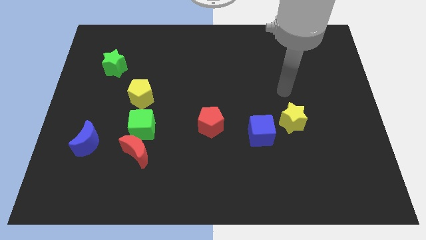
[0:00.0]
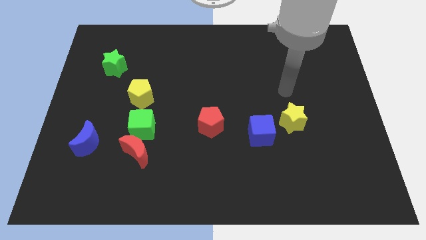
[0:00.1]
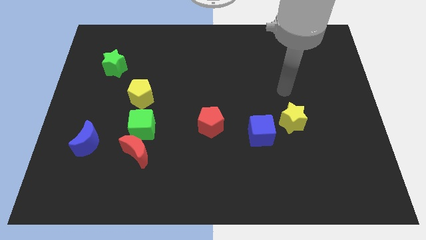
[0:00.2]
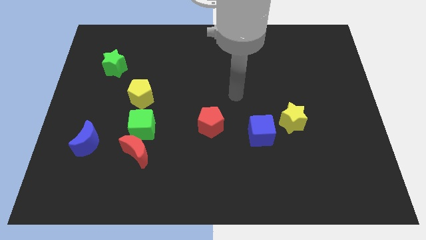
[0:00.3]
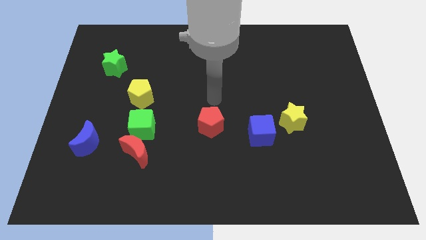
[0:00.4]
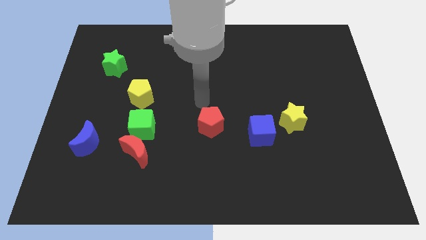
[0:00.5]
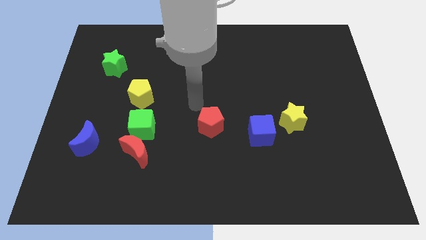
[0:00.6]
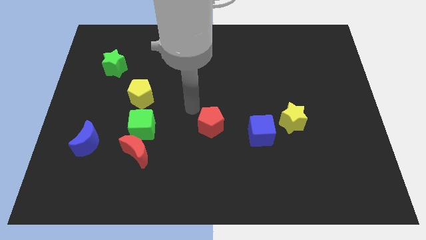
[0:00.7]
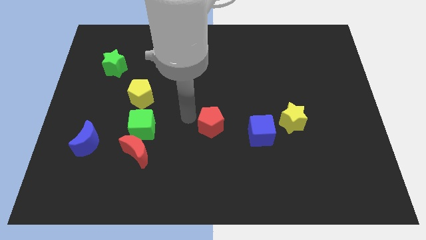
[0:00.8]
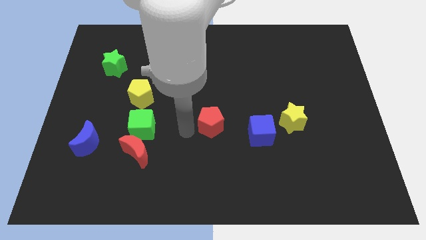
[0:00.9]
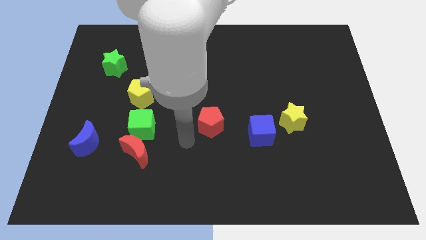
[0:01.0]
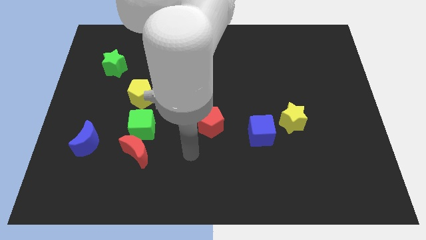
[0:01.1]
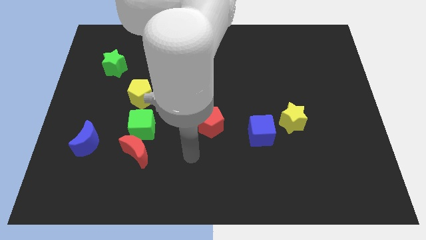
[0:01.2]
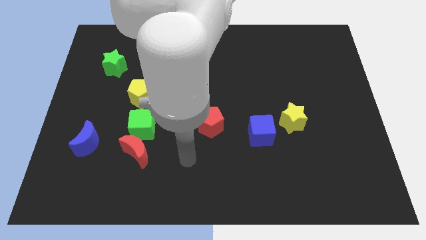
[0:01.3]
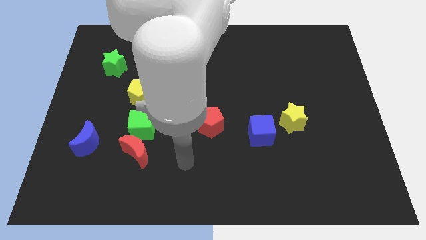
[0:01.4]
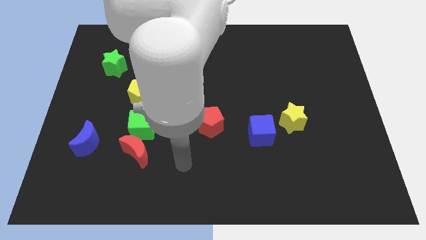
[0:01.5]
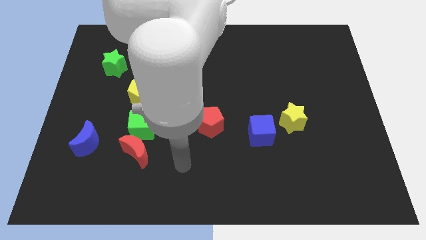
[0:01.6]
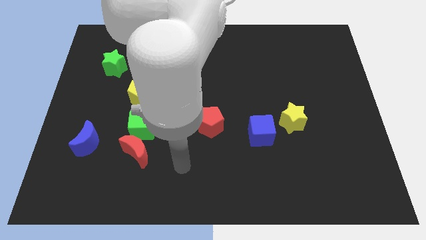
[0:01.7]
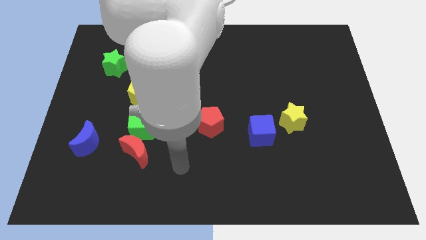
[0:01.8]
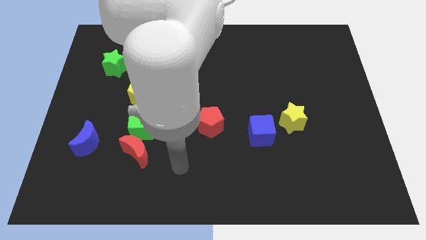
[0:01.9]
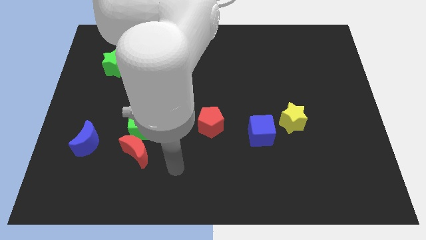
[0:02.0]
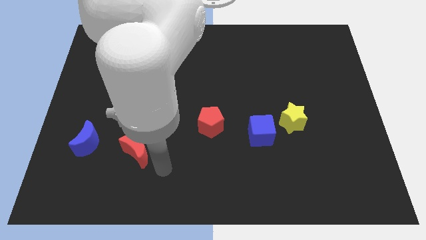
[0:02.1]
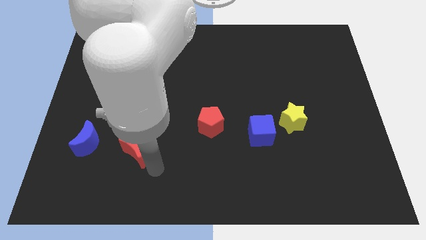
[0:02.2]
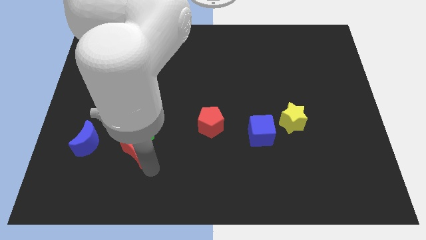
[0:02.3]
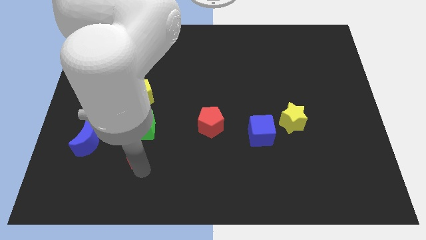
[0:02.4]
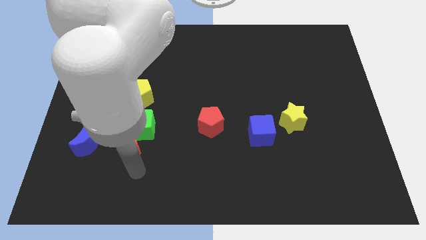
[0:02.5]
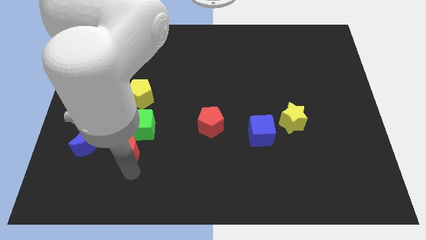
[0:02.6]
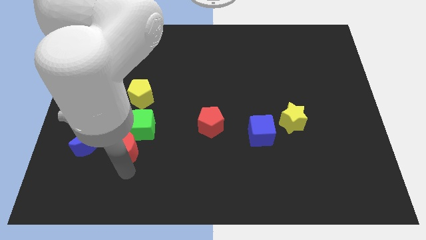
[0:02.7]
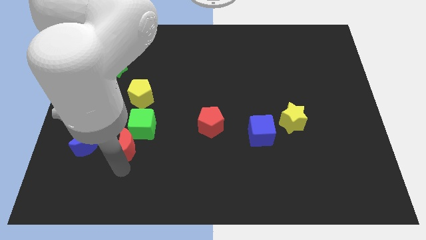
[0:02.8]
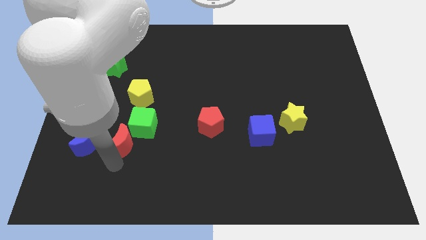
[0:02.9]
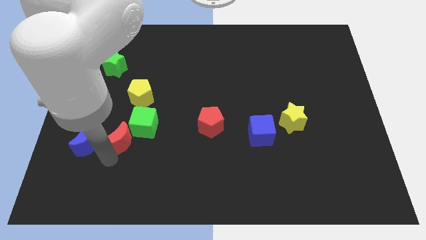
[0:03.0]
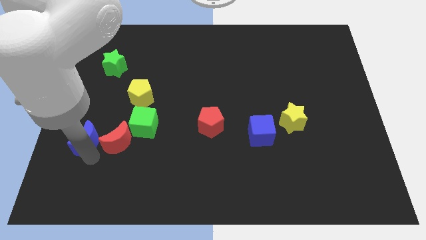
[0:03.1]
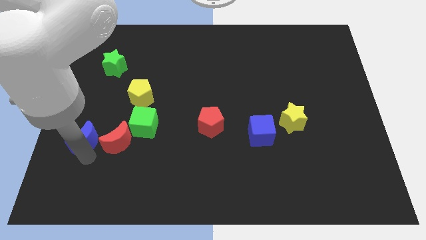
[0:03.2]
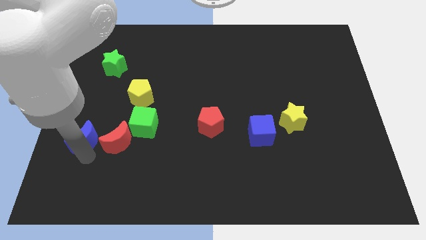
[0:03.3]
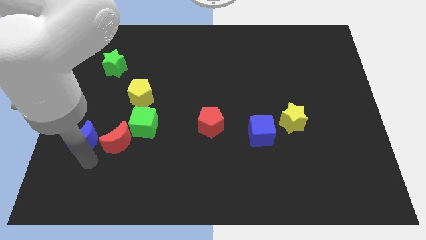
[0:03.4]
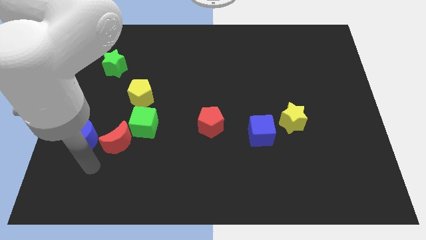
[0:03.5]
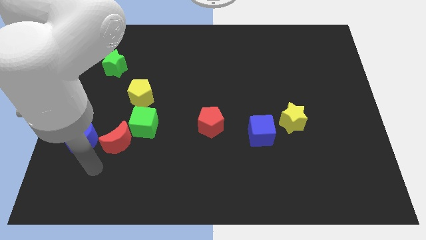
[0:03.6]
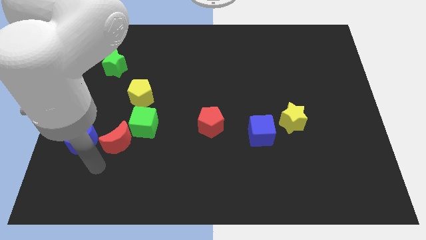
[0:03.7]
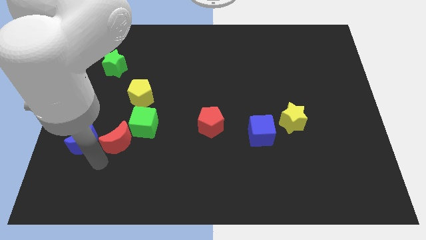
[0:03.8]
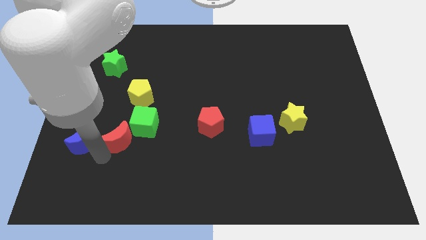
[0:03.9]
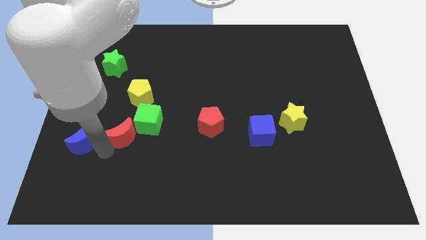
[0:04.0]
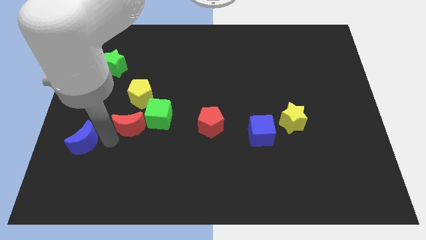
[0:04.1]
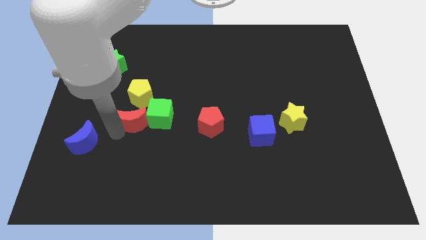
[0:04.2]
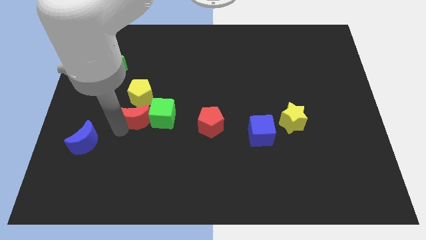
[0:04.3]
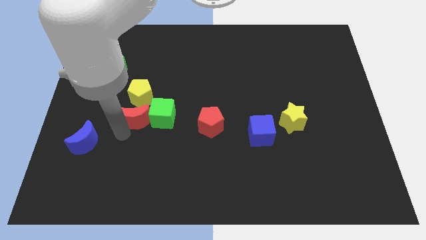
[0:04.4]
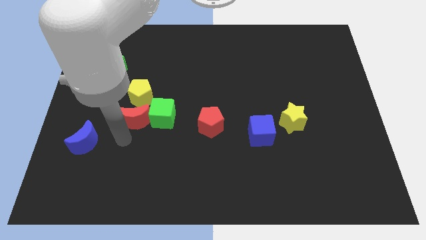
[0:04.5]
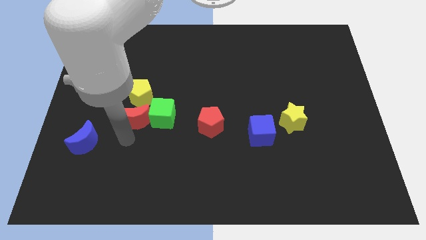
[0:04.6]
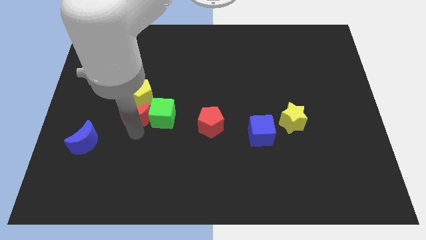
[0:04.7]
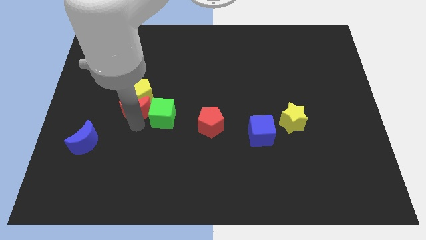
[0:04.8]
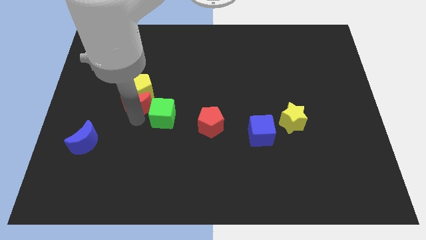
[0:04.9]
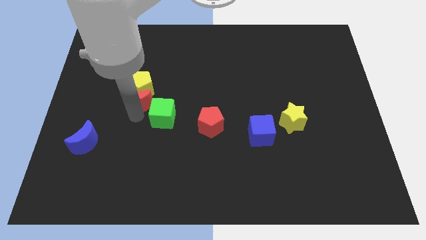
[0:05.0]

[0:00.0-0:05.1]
put the red moon next to the yellow pentagon

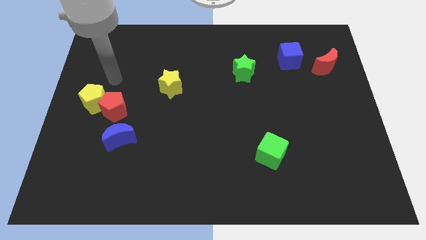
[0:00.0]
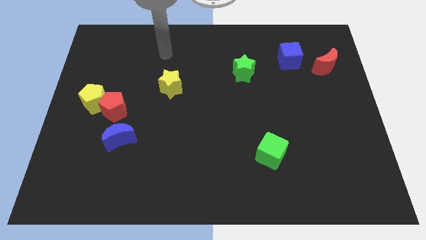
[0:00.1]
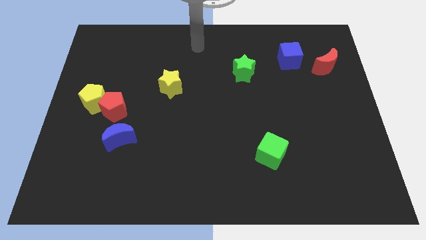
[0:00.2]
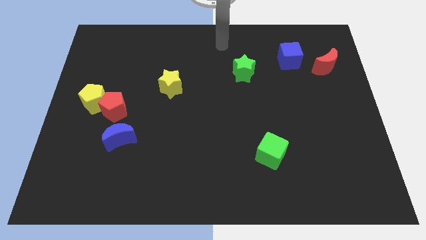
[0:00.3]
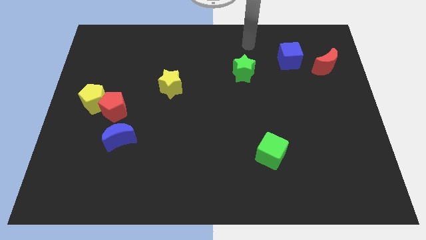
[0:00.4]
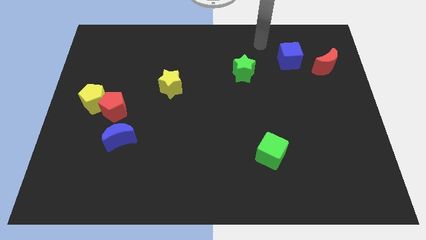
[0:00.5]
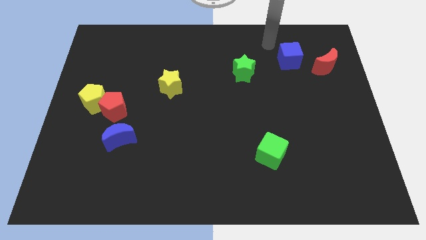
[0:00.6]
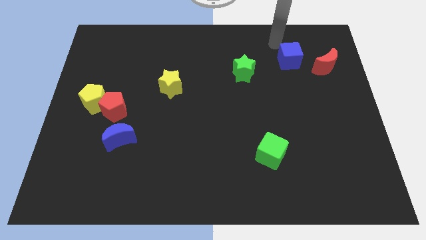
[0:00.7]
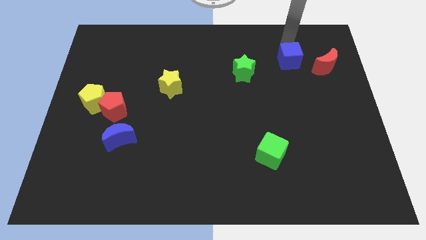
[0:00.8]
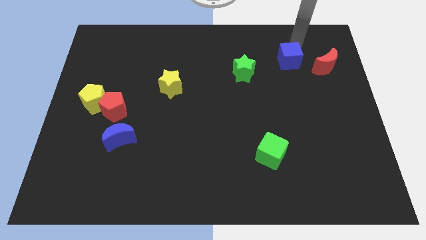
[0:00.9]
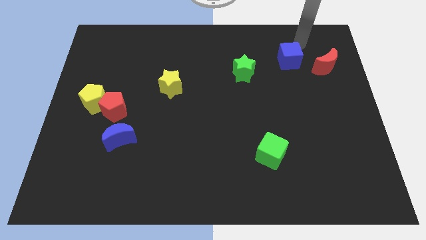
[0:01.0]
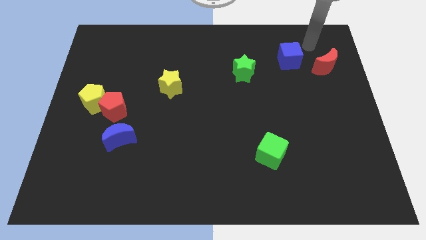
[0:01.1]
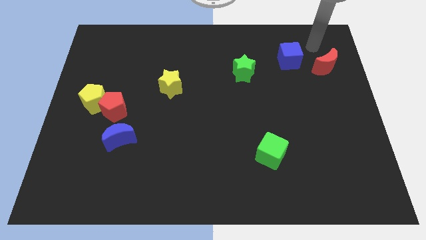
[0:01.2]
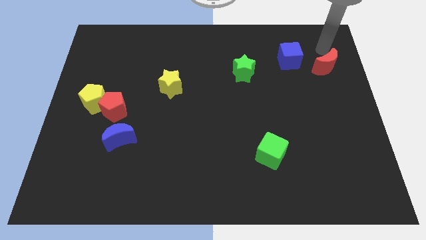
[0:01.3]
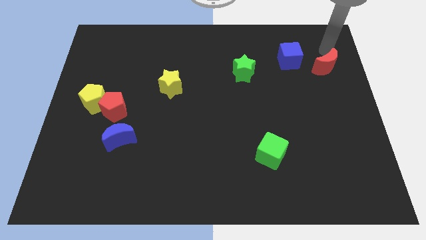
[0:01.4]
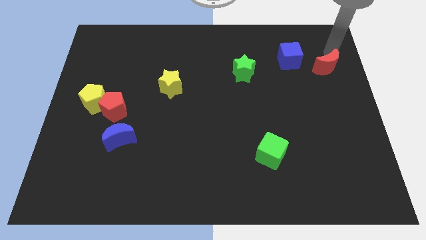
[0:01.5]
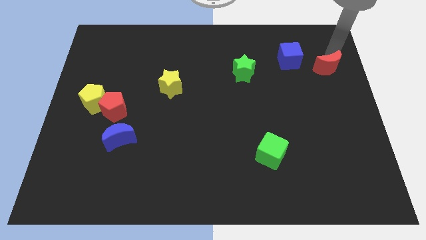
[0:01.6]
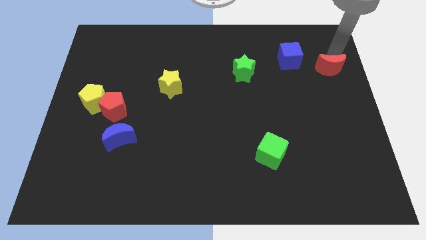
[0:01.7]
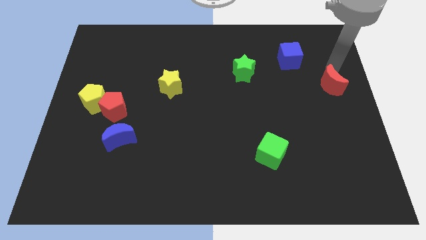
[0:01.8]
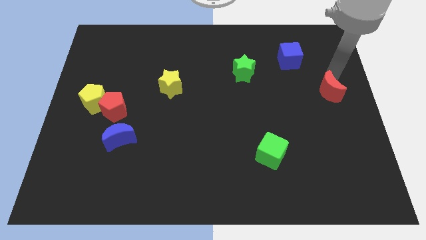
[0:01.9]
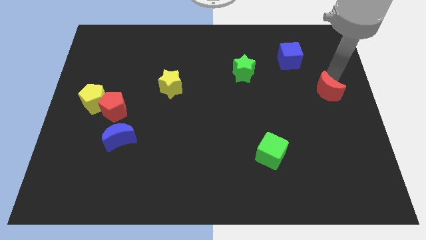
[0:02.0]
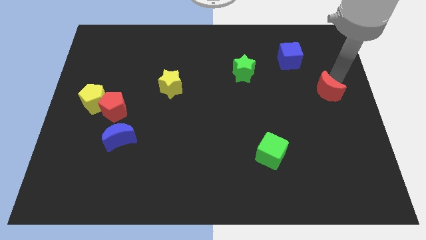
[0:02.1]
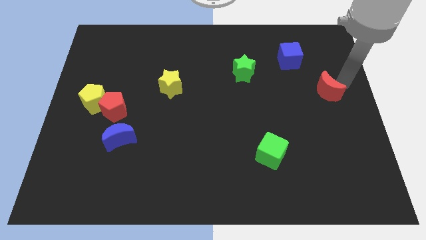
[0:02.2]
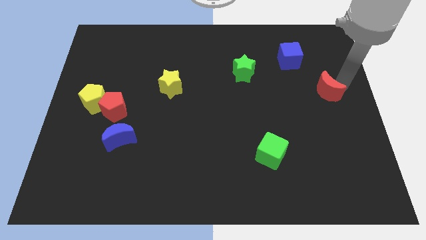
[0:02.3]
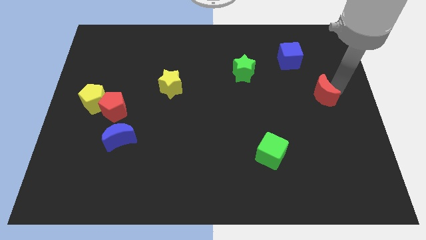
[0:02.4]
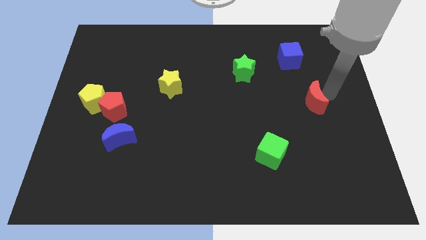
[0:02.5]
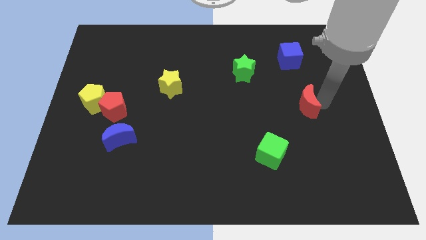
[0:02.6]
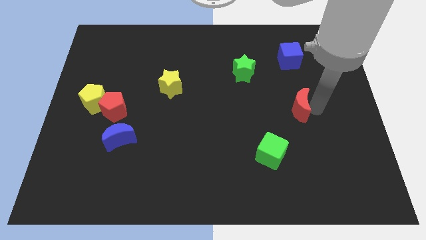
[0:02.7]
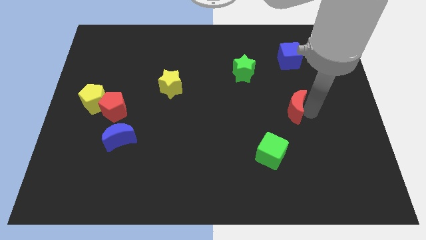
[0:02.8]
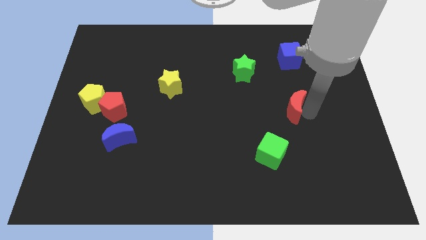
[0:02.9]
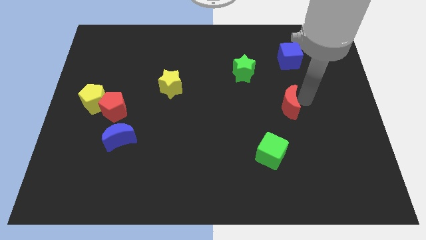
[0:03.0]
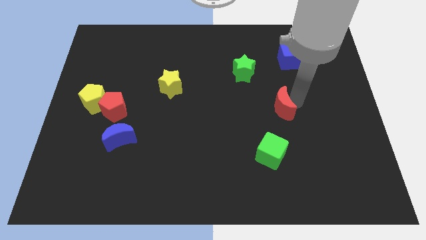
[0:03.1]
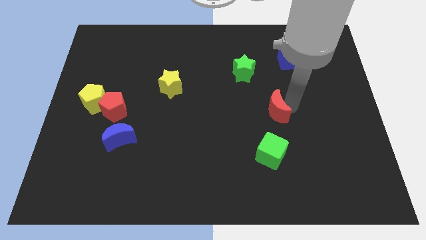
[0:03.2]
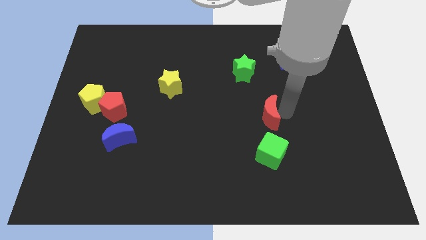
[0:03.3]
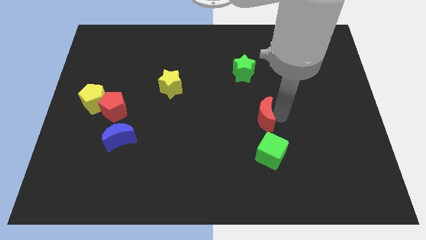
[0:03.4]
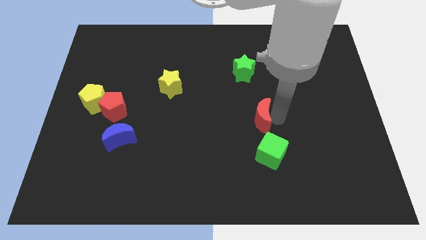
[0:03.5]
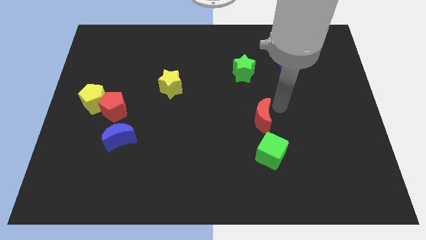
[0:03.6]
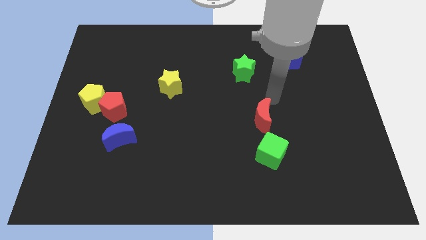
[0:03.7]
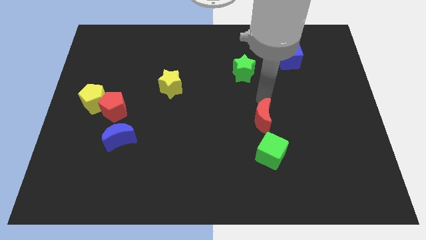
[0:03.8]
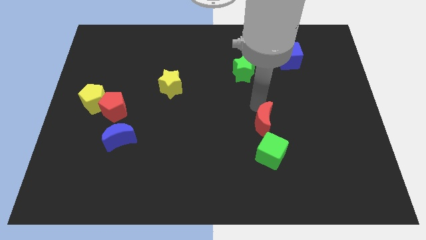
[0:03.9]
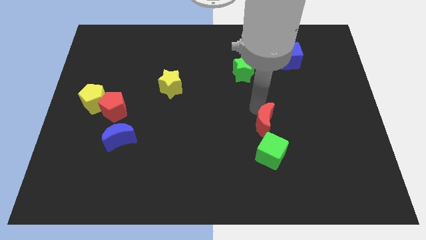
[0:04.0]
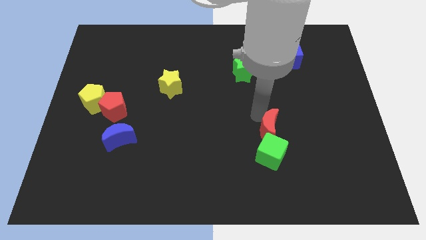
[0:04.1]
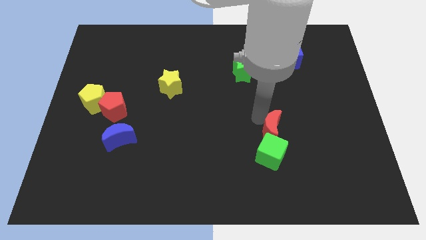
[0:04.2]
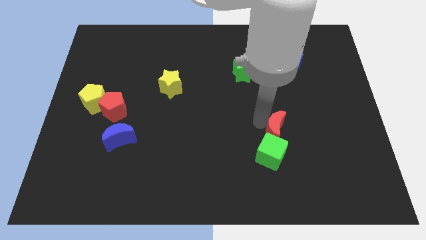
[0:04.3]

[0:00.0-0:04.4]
move the red moon close to the green cube
